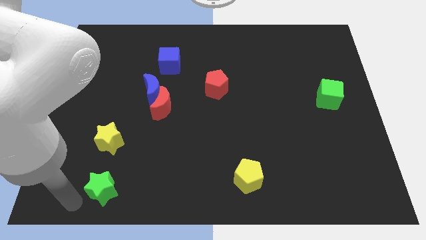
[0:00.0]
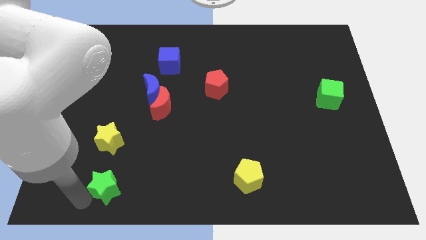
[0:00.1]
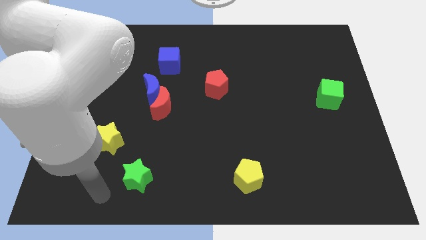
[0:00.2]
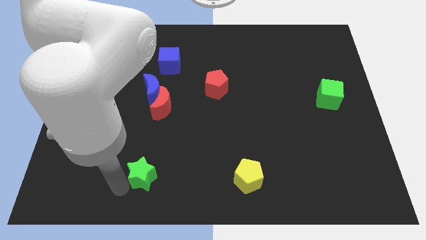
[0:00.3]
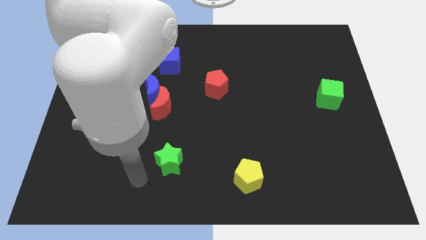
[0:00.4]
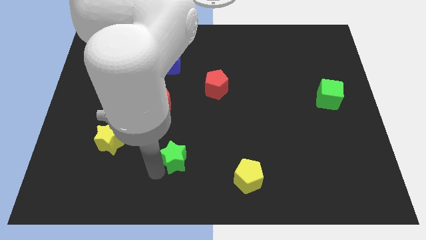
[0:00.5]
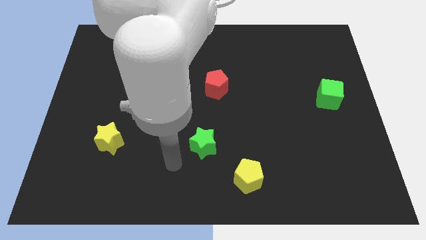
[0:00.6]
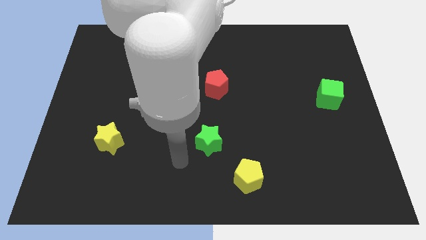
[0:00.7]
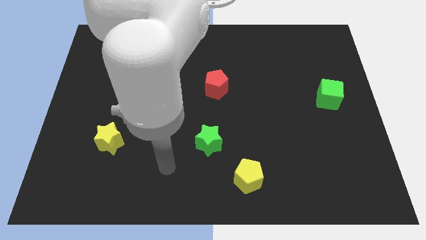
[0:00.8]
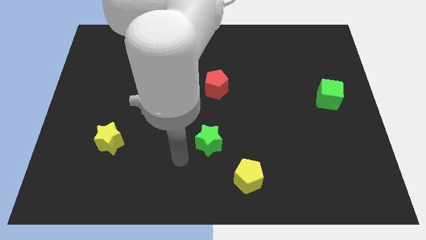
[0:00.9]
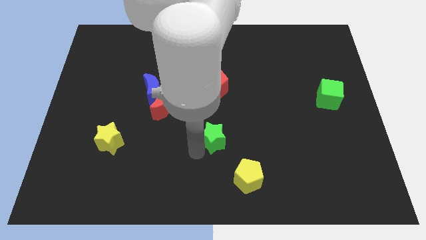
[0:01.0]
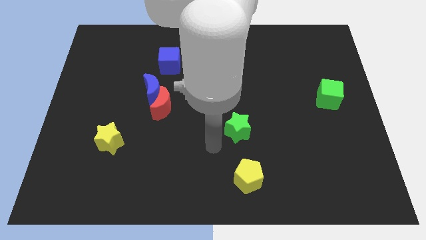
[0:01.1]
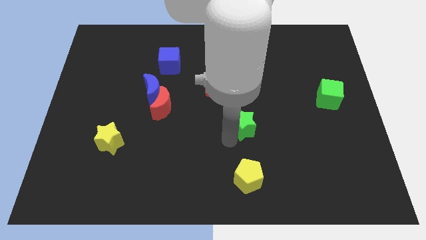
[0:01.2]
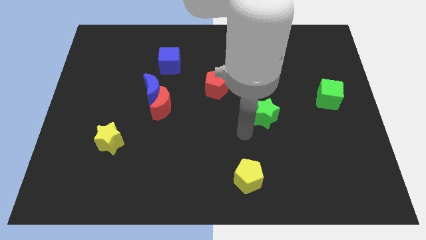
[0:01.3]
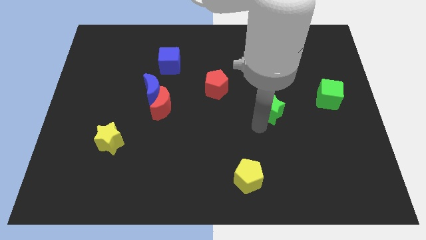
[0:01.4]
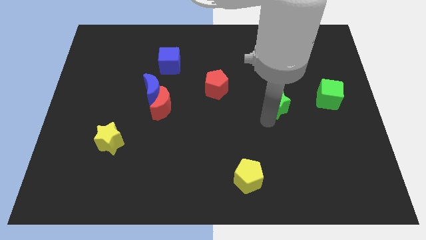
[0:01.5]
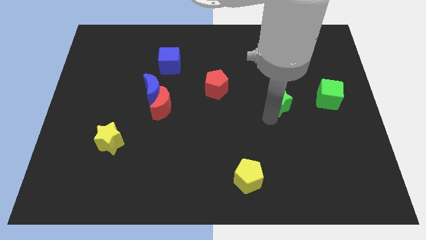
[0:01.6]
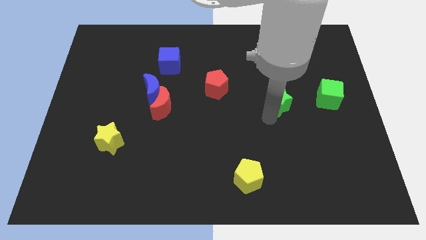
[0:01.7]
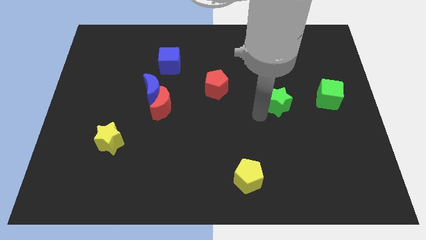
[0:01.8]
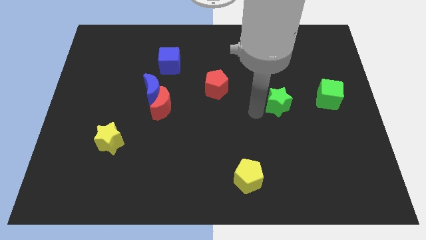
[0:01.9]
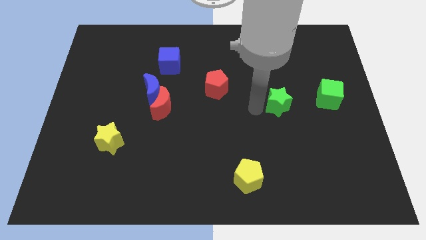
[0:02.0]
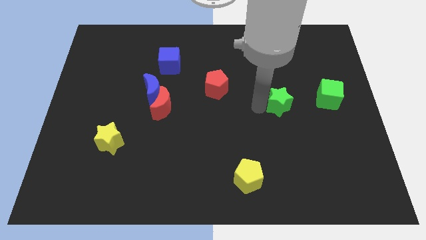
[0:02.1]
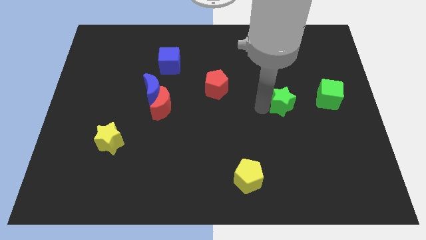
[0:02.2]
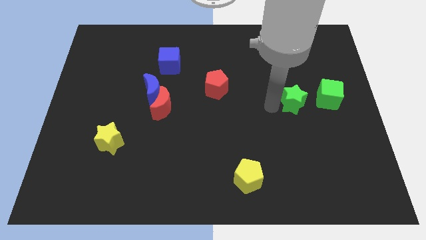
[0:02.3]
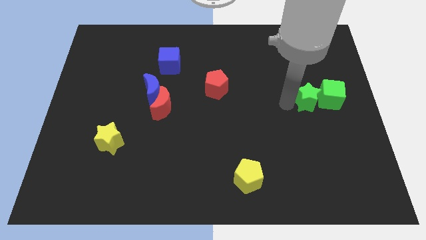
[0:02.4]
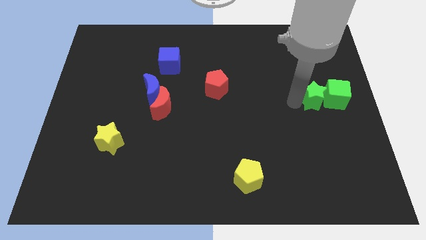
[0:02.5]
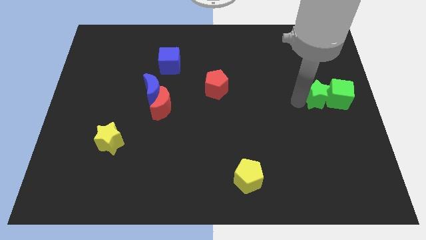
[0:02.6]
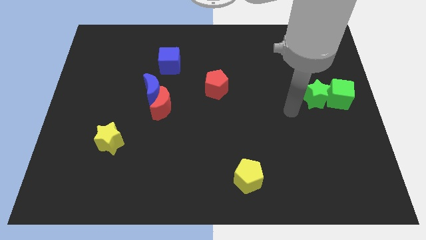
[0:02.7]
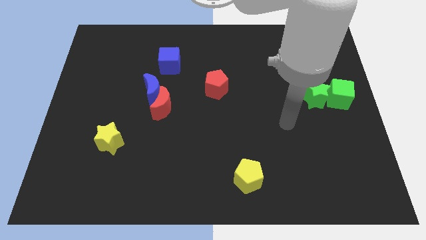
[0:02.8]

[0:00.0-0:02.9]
move the green star into the left side of the green cube

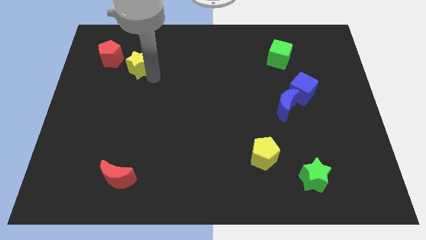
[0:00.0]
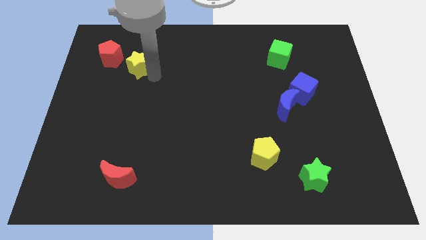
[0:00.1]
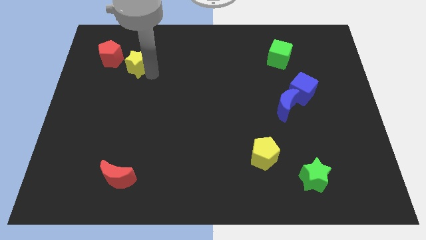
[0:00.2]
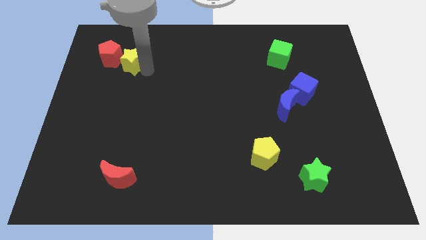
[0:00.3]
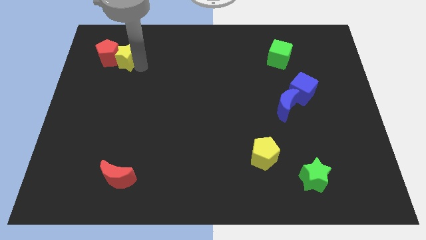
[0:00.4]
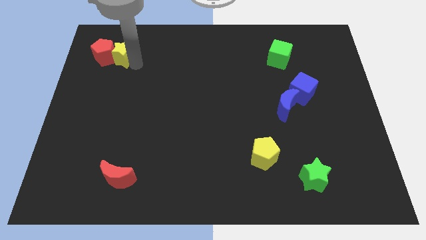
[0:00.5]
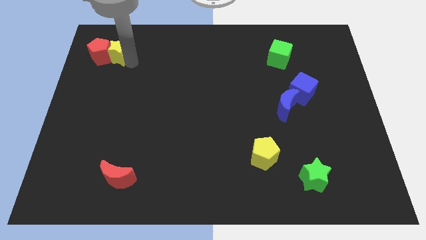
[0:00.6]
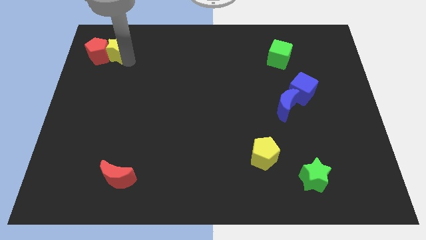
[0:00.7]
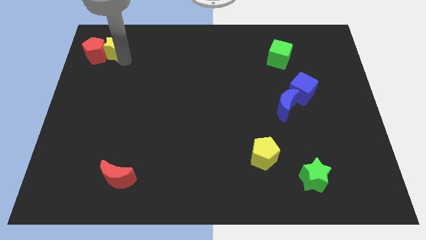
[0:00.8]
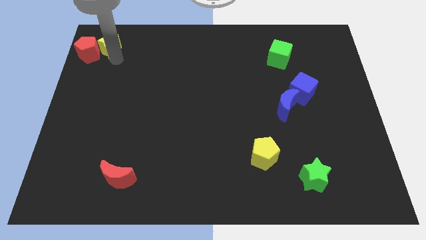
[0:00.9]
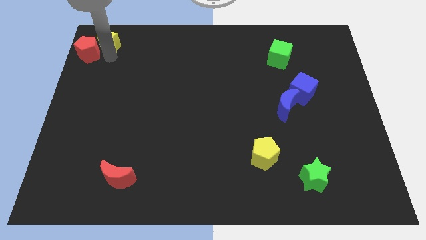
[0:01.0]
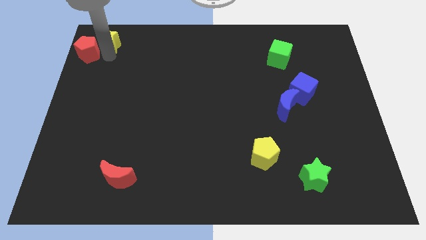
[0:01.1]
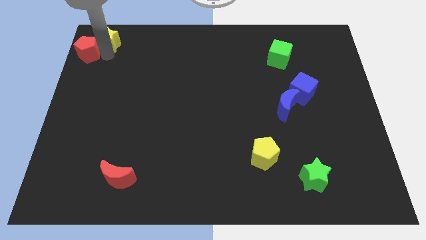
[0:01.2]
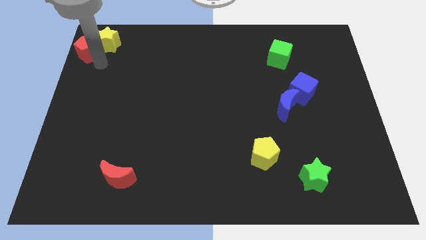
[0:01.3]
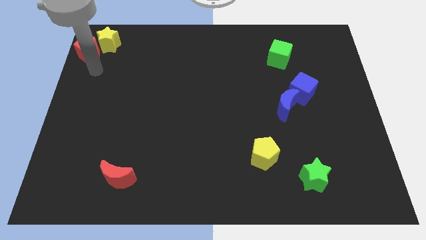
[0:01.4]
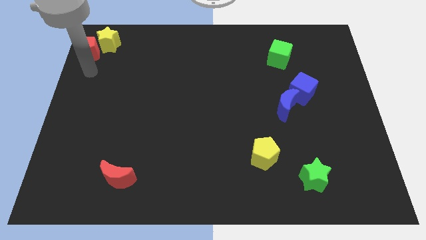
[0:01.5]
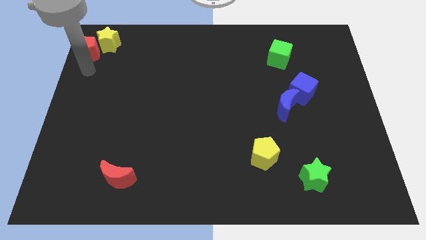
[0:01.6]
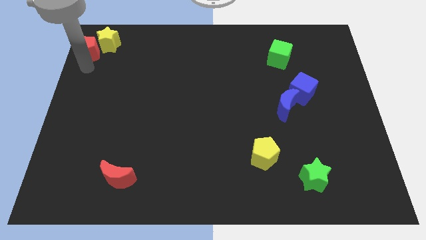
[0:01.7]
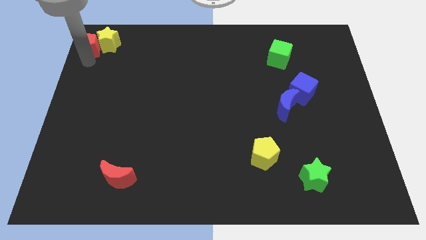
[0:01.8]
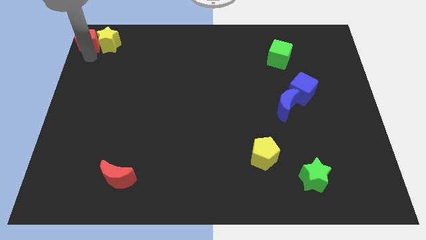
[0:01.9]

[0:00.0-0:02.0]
slide the yellow star into the red pentagon

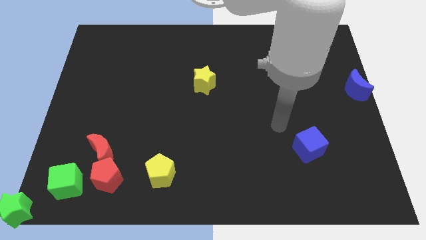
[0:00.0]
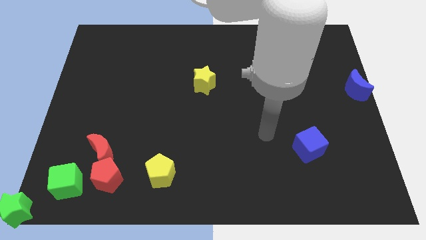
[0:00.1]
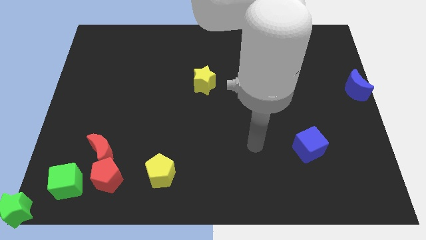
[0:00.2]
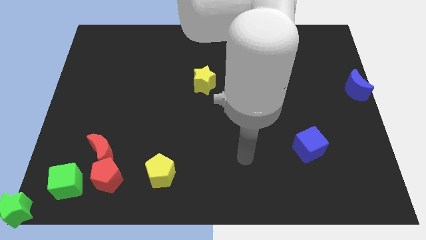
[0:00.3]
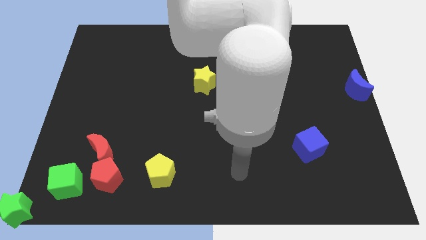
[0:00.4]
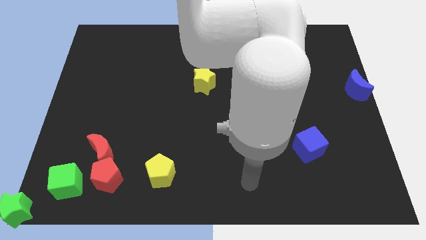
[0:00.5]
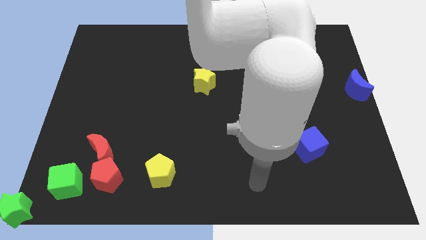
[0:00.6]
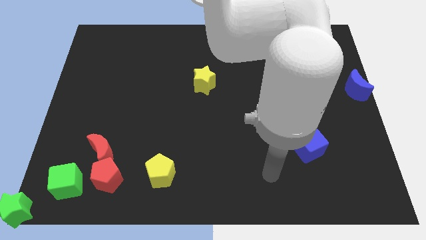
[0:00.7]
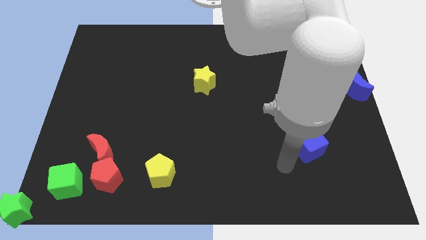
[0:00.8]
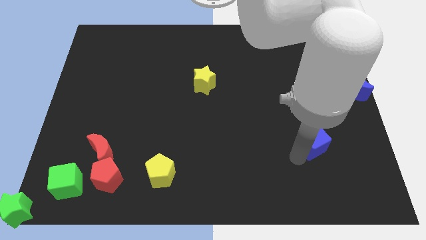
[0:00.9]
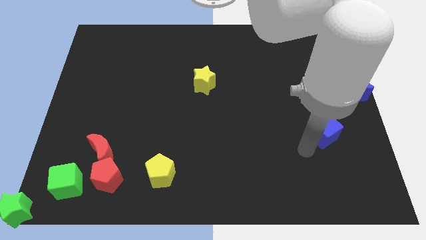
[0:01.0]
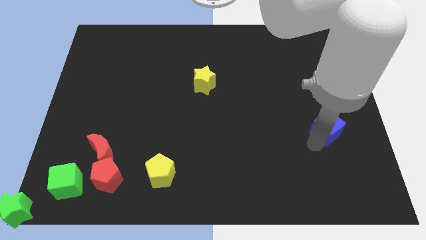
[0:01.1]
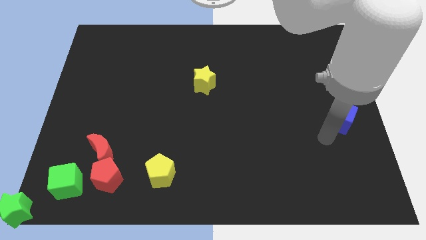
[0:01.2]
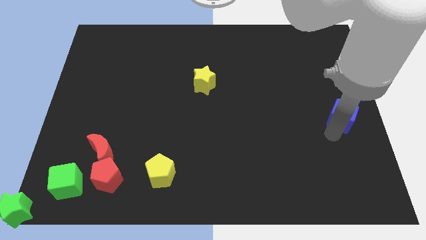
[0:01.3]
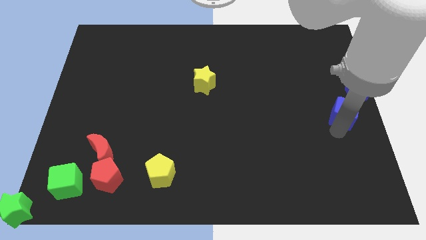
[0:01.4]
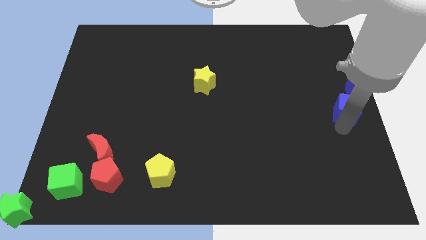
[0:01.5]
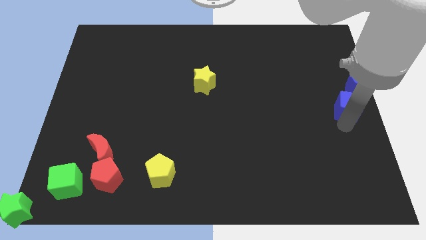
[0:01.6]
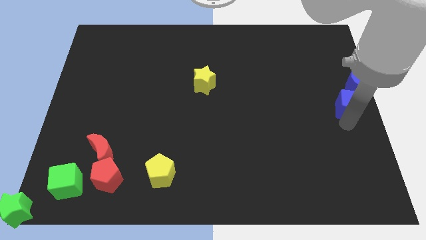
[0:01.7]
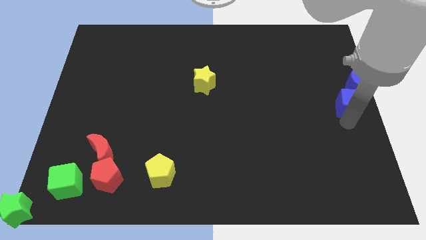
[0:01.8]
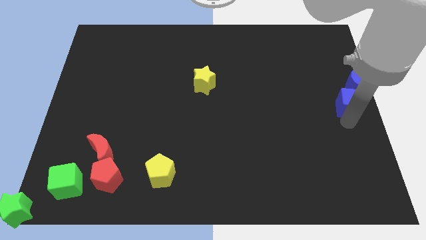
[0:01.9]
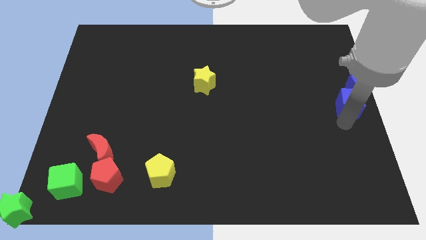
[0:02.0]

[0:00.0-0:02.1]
move the blue cube into the blue moon

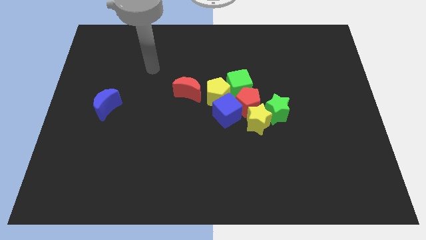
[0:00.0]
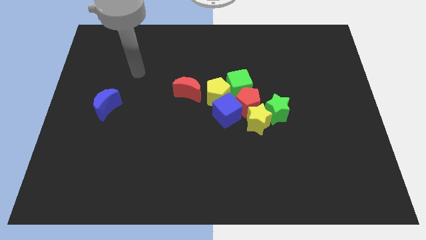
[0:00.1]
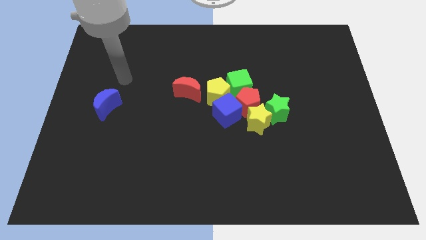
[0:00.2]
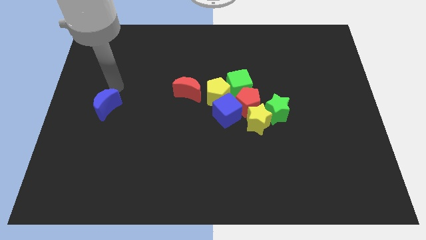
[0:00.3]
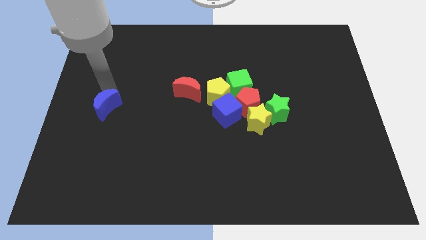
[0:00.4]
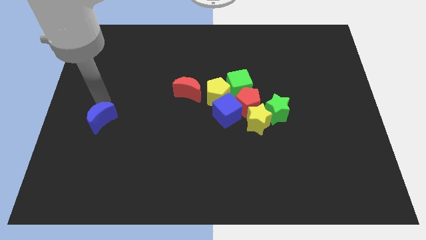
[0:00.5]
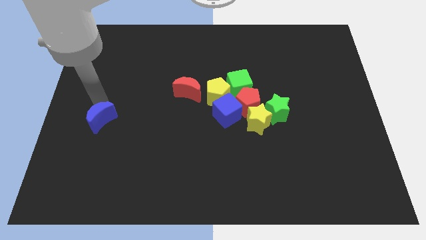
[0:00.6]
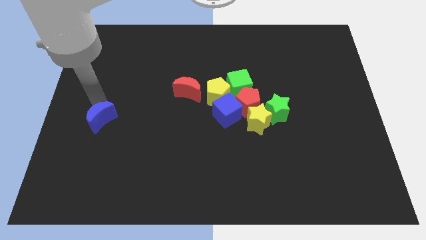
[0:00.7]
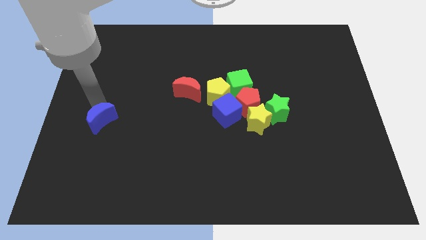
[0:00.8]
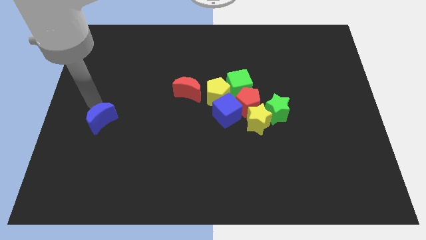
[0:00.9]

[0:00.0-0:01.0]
push the blue crescent to the bottom of the board

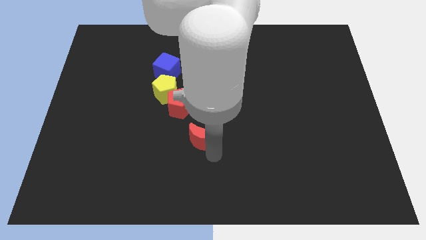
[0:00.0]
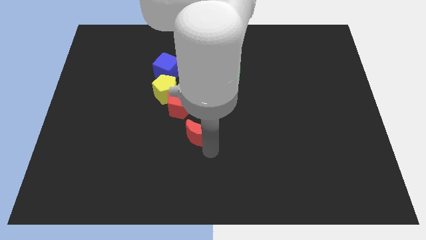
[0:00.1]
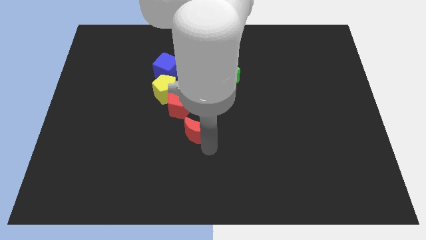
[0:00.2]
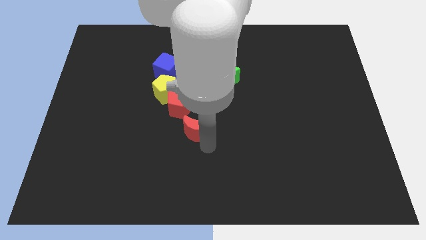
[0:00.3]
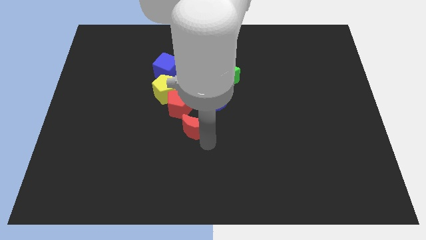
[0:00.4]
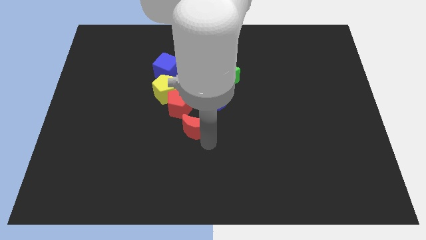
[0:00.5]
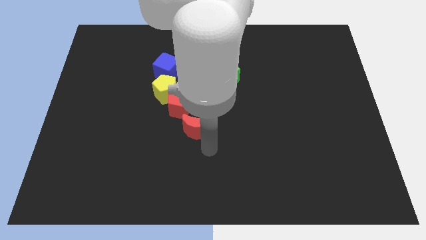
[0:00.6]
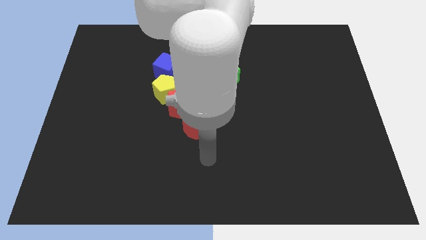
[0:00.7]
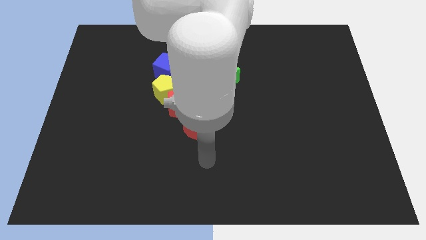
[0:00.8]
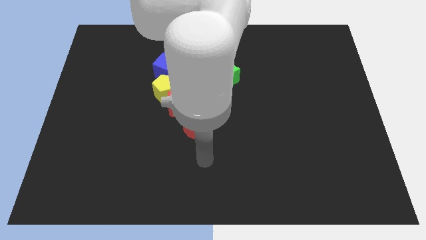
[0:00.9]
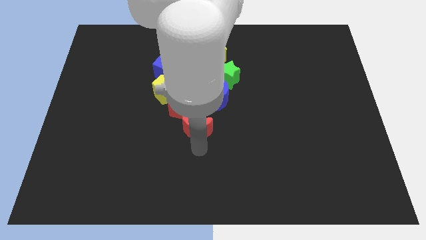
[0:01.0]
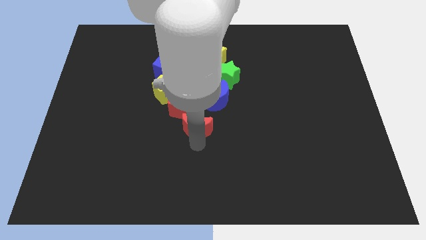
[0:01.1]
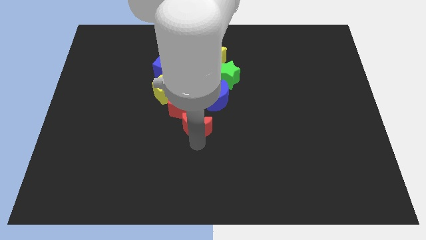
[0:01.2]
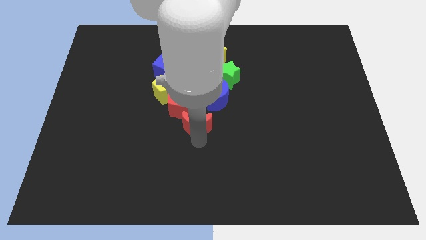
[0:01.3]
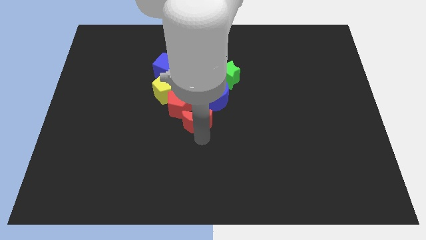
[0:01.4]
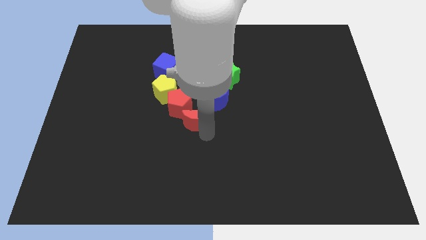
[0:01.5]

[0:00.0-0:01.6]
push the red moon into the blue moon and the red pentagon
